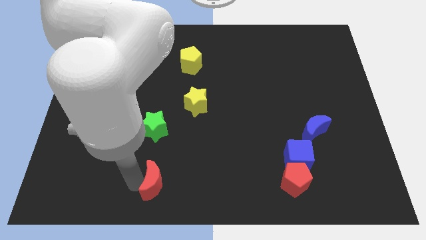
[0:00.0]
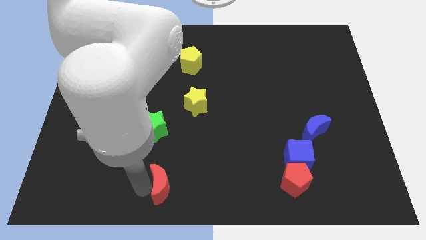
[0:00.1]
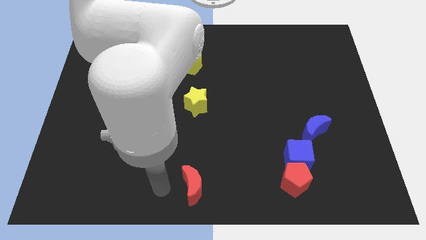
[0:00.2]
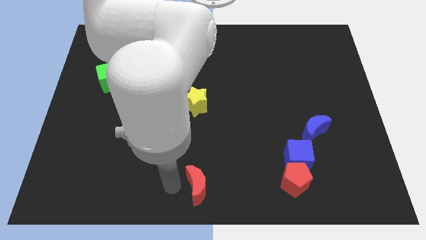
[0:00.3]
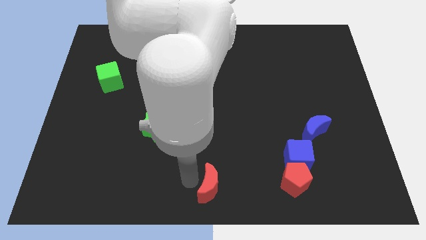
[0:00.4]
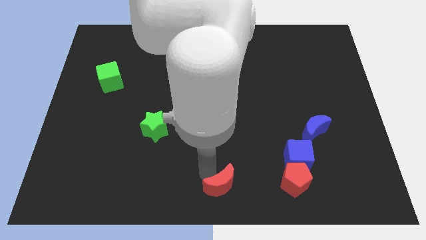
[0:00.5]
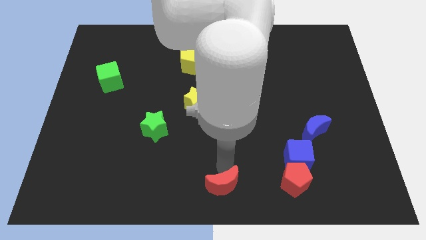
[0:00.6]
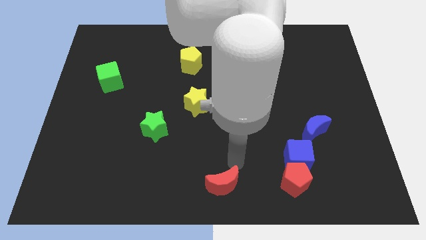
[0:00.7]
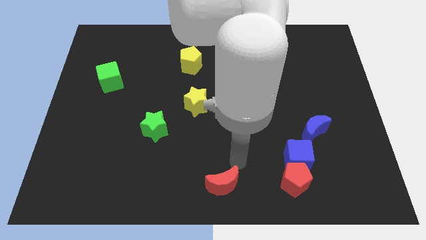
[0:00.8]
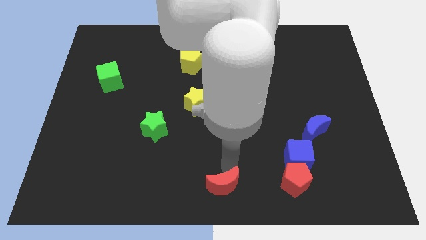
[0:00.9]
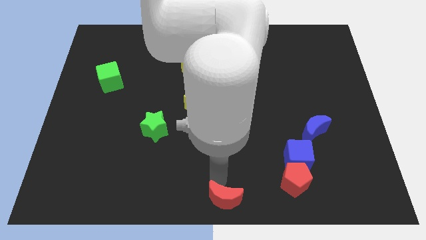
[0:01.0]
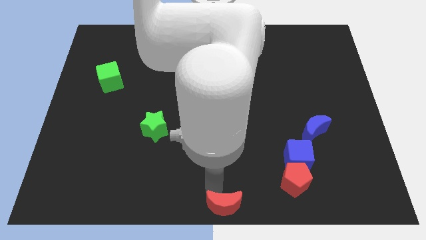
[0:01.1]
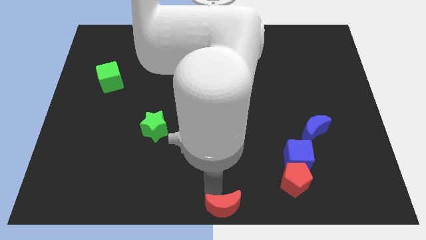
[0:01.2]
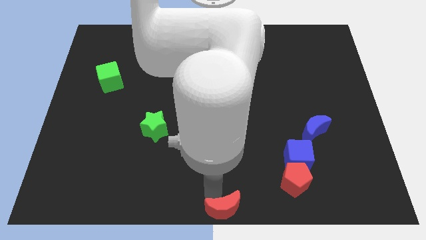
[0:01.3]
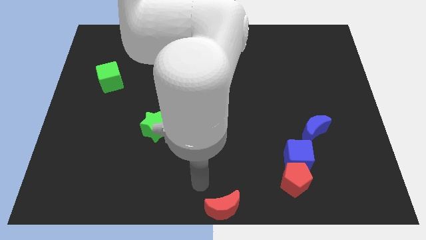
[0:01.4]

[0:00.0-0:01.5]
move the red crescent to the bottom center of the board

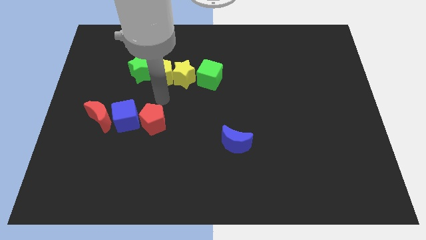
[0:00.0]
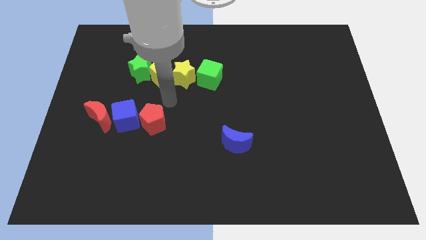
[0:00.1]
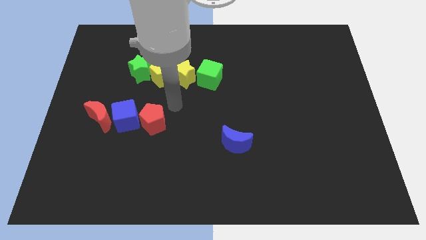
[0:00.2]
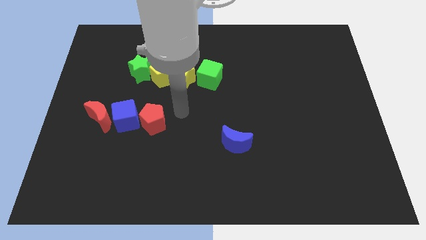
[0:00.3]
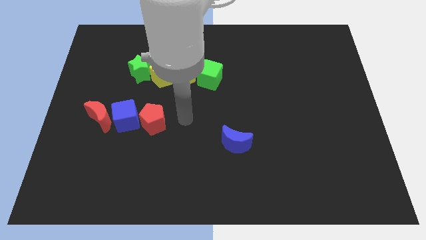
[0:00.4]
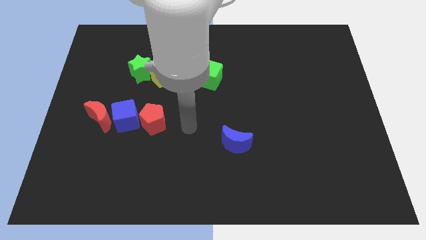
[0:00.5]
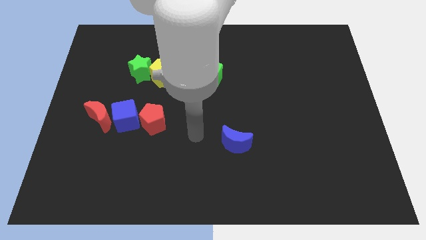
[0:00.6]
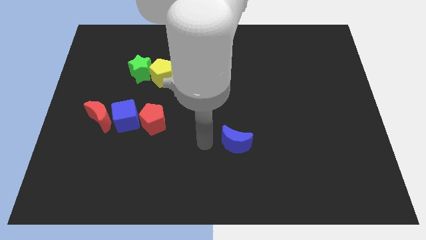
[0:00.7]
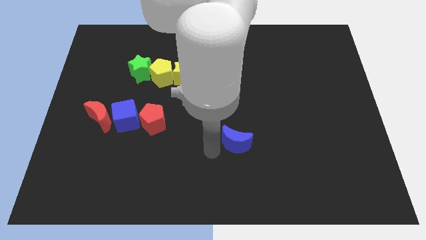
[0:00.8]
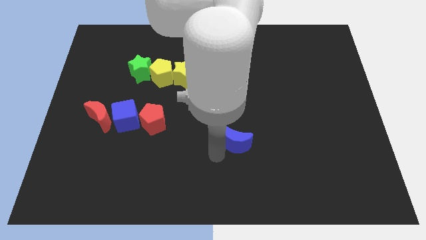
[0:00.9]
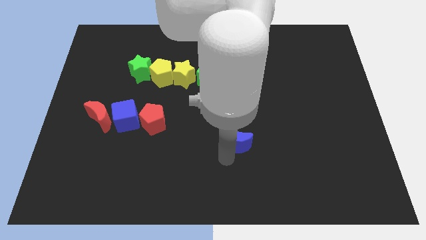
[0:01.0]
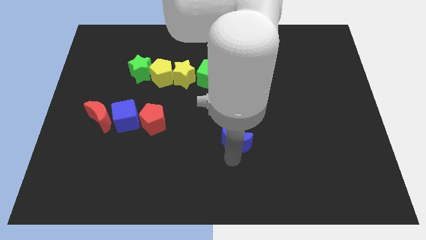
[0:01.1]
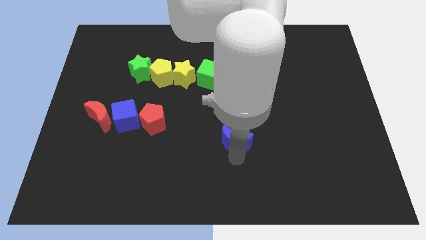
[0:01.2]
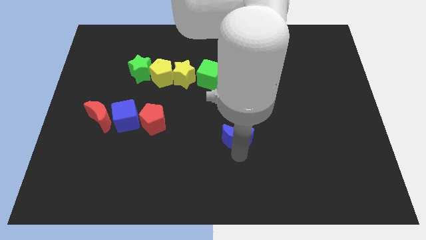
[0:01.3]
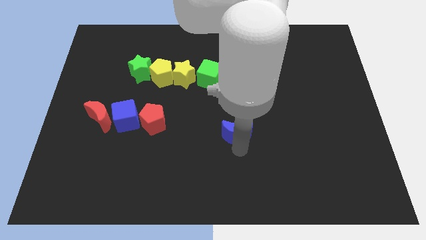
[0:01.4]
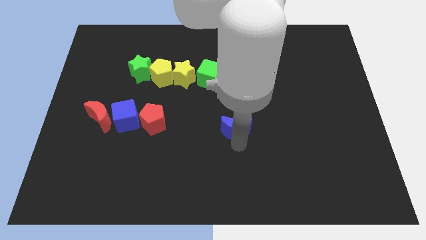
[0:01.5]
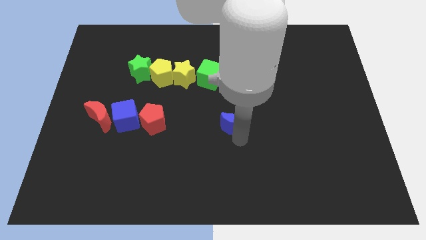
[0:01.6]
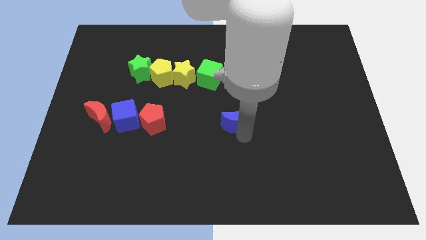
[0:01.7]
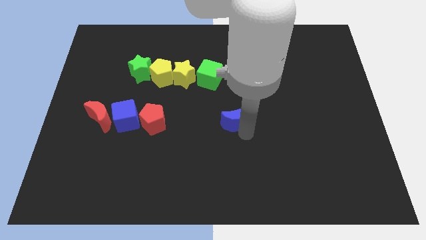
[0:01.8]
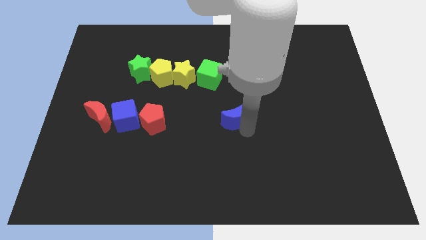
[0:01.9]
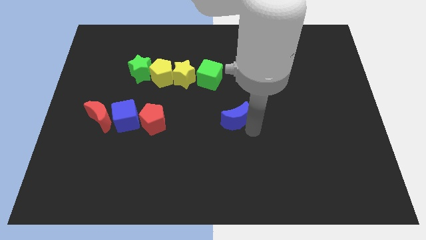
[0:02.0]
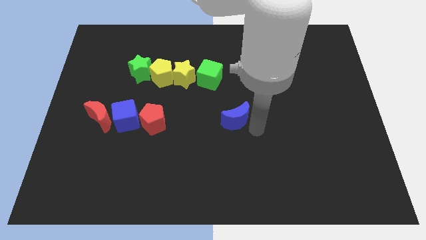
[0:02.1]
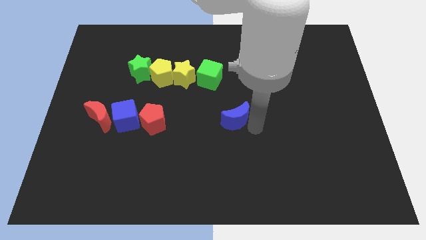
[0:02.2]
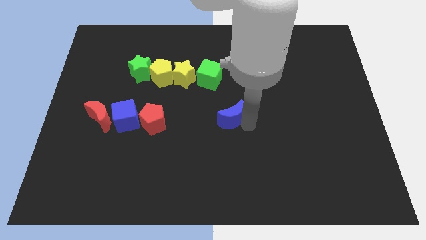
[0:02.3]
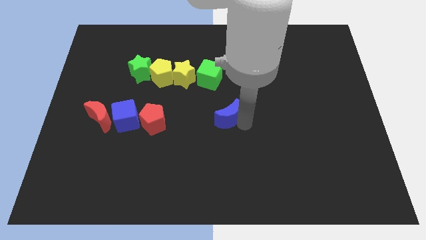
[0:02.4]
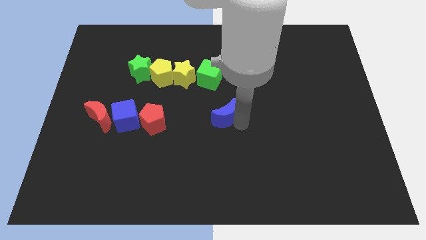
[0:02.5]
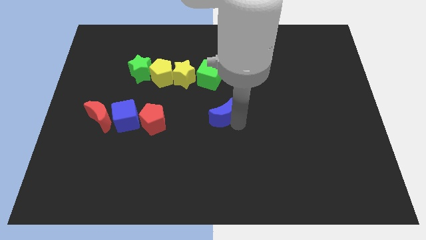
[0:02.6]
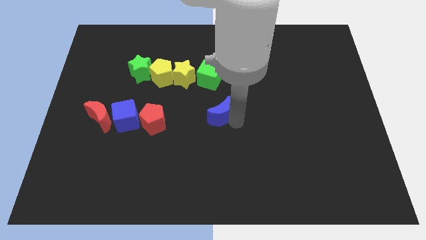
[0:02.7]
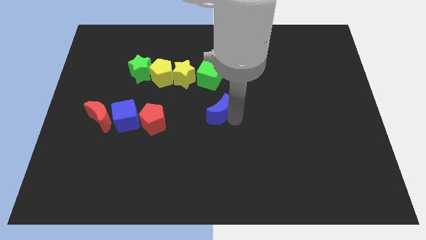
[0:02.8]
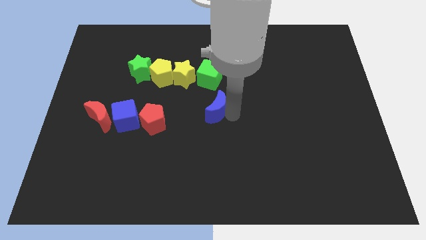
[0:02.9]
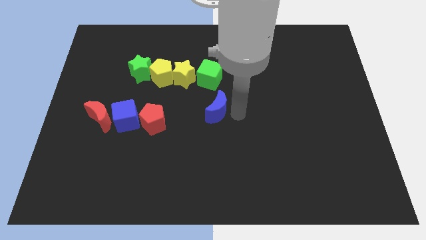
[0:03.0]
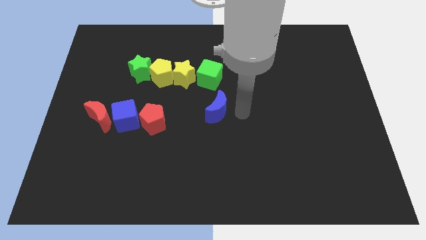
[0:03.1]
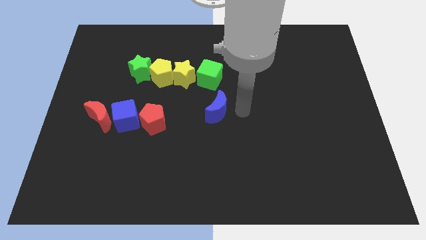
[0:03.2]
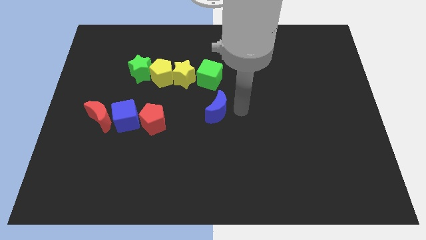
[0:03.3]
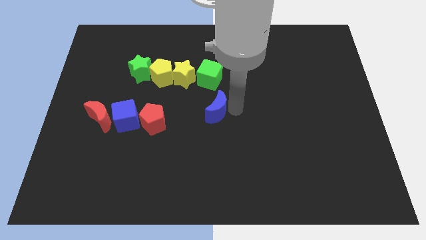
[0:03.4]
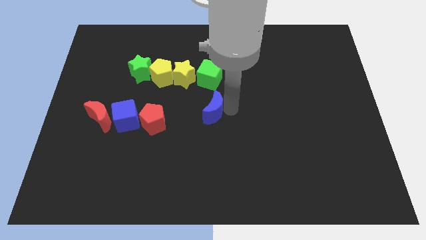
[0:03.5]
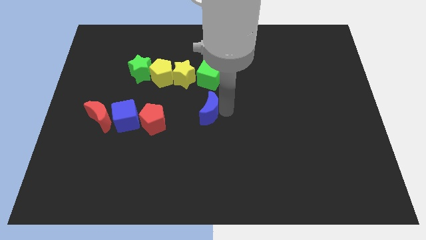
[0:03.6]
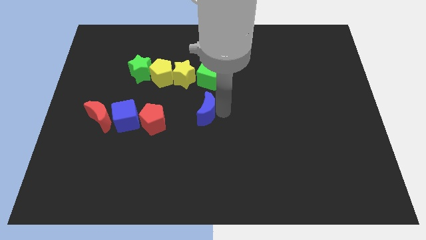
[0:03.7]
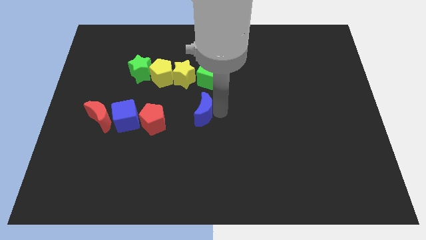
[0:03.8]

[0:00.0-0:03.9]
push the blue moon to the bottom side of the green cube

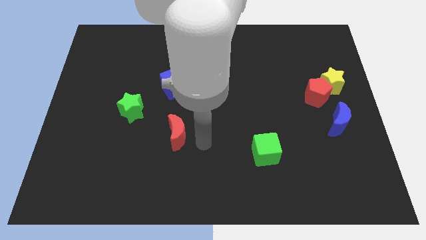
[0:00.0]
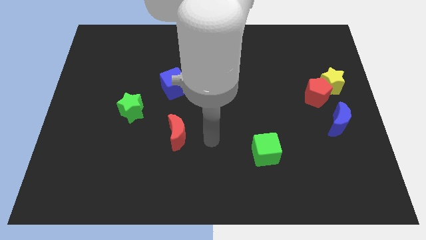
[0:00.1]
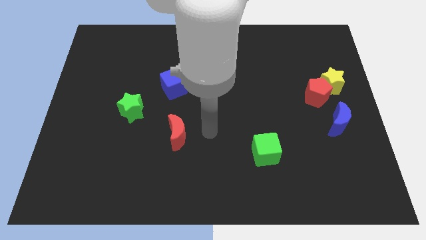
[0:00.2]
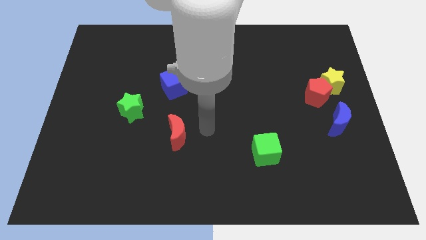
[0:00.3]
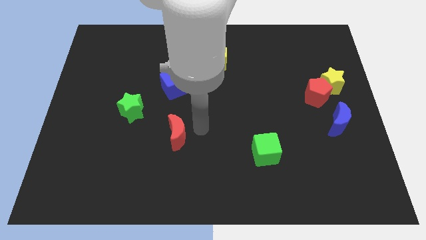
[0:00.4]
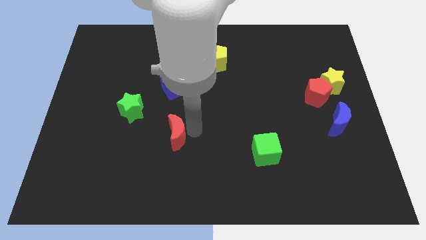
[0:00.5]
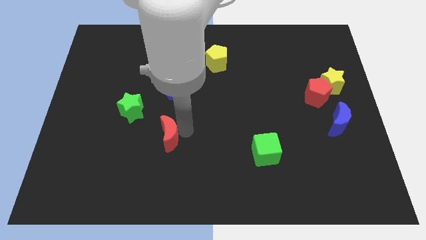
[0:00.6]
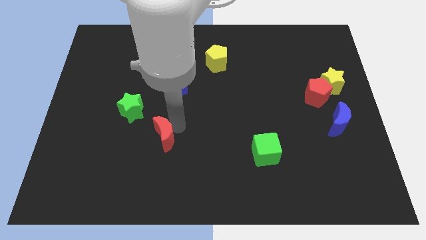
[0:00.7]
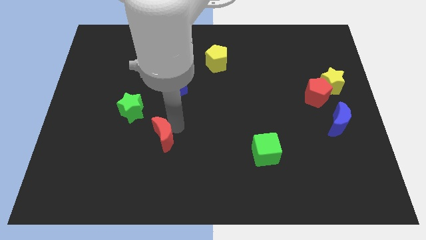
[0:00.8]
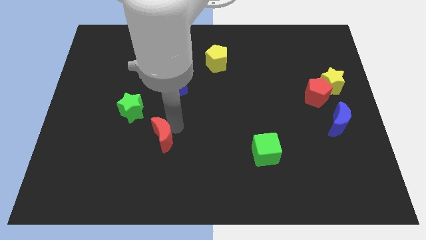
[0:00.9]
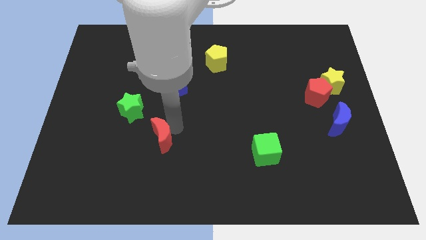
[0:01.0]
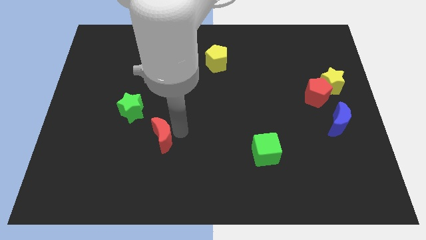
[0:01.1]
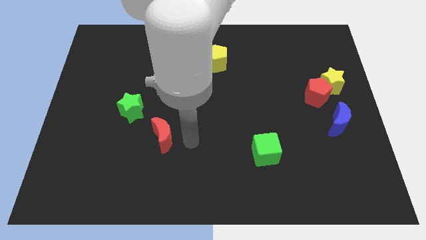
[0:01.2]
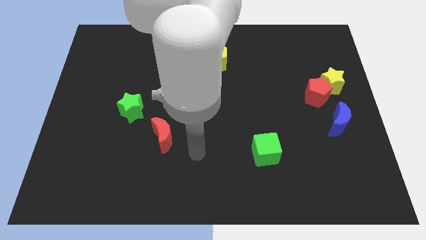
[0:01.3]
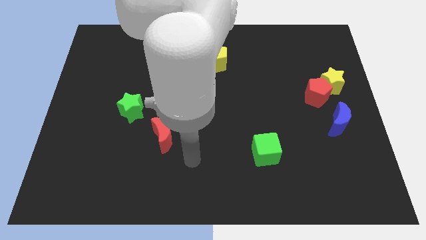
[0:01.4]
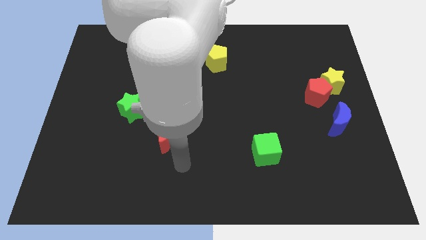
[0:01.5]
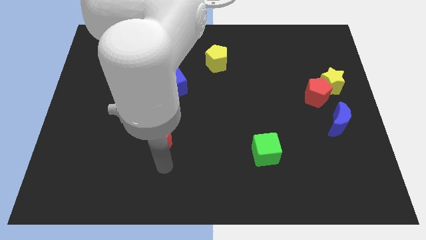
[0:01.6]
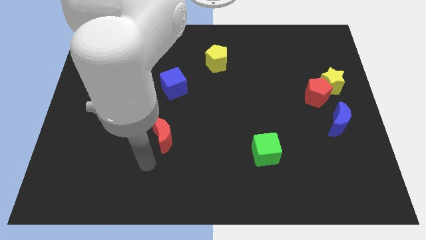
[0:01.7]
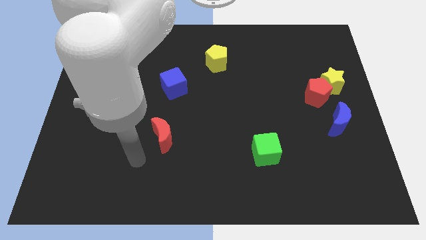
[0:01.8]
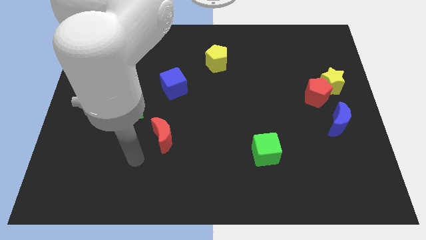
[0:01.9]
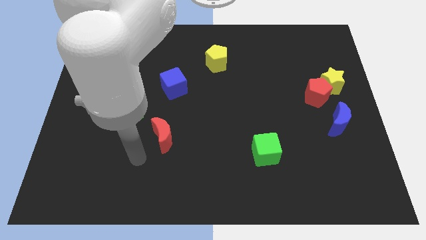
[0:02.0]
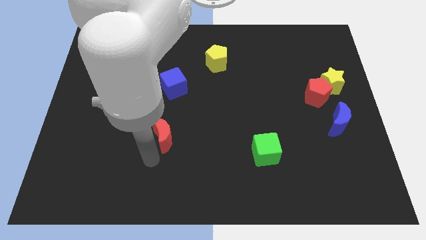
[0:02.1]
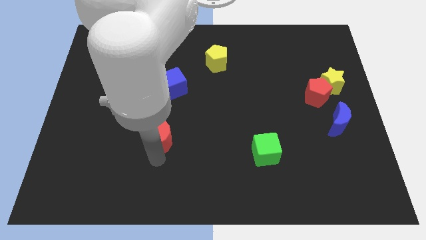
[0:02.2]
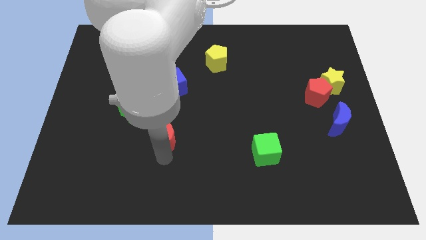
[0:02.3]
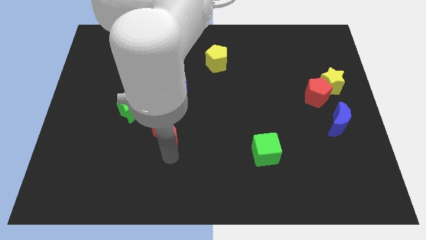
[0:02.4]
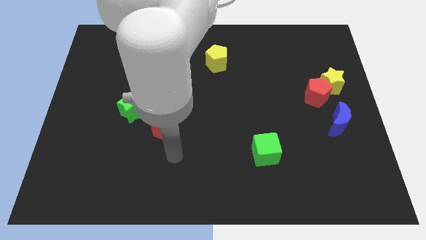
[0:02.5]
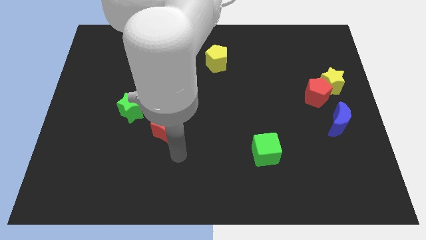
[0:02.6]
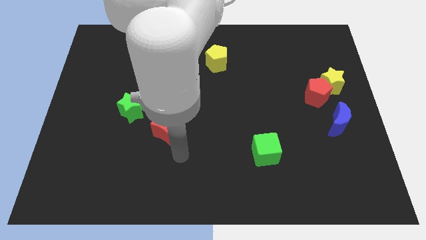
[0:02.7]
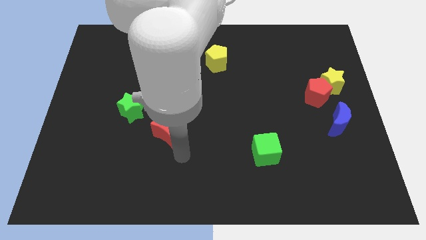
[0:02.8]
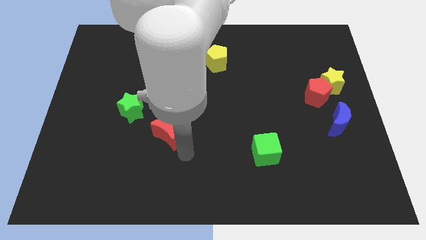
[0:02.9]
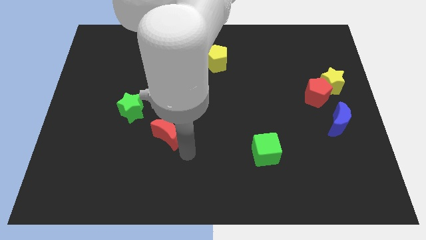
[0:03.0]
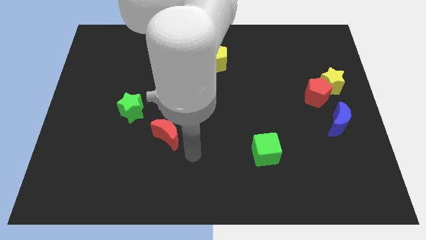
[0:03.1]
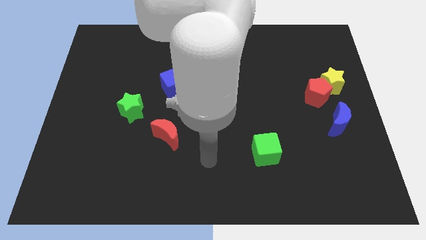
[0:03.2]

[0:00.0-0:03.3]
move red crescent towards the green star

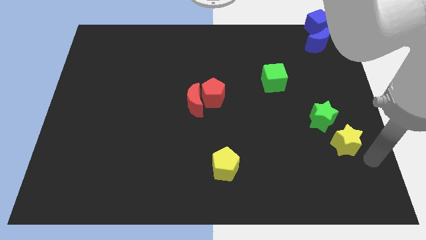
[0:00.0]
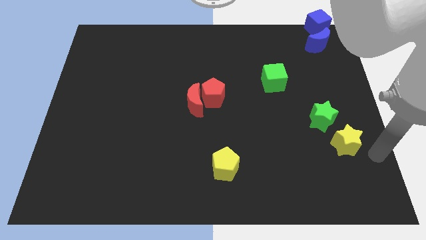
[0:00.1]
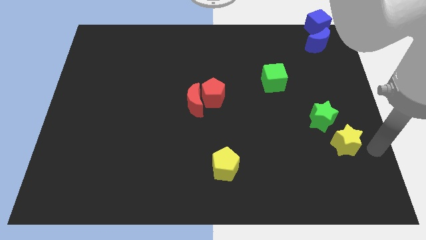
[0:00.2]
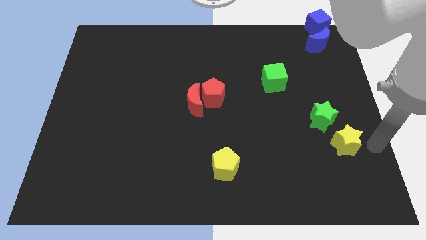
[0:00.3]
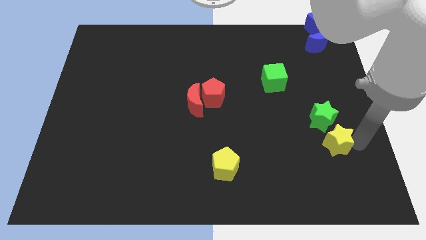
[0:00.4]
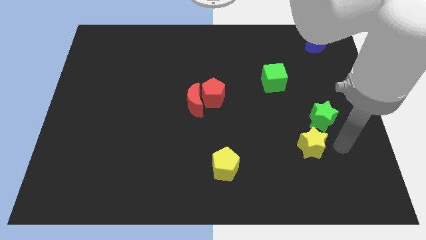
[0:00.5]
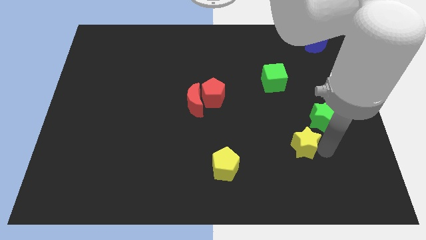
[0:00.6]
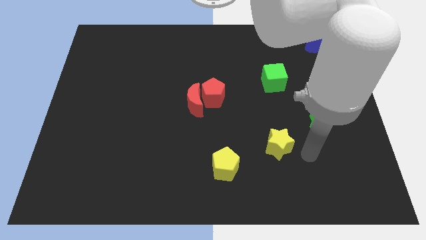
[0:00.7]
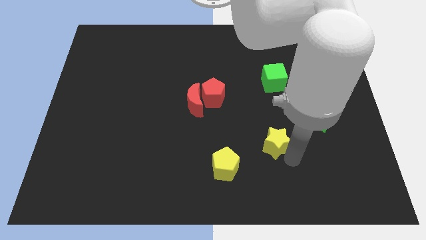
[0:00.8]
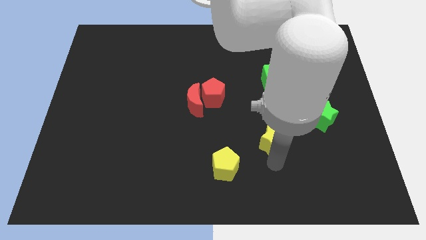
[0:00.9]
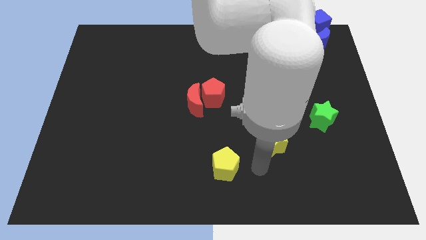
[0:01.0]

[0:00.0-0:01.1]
move the yellow star to the left of the board
